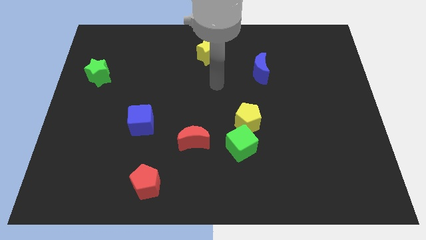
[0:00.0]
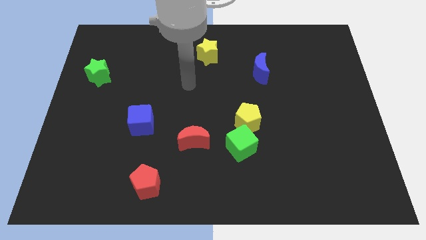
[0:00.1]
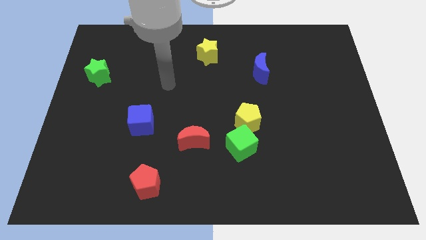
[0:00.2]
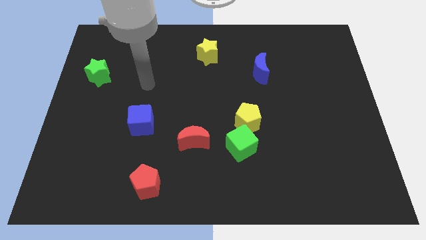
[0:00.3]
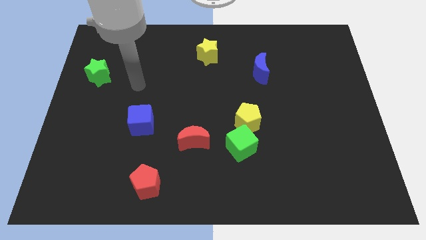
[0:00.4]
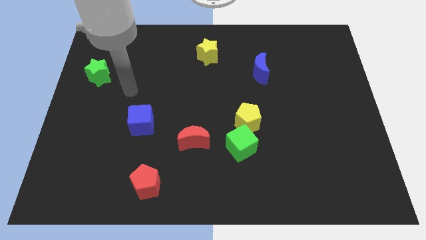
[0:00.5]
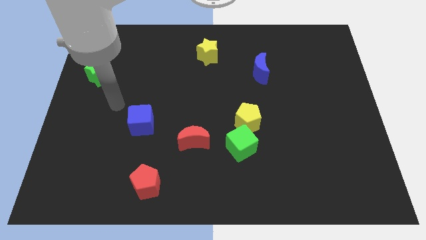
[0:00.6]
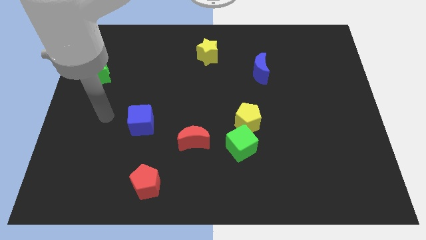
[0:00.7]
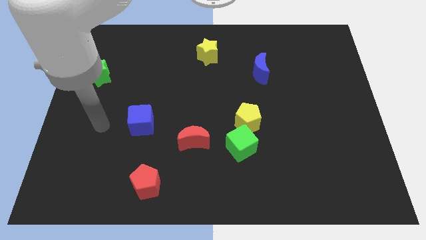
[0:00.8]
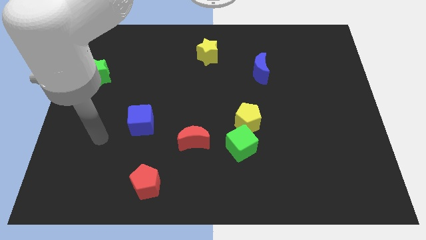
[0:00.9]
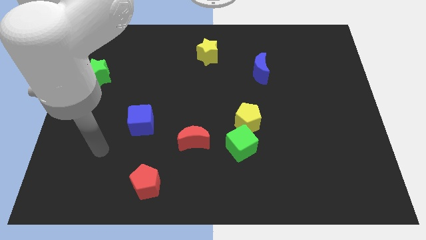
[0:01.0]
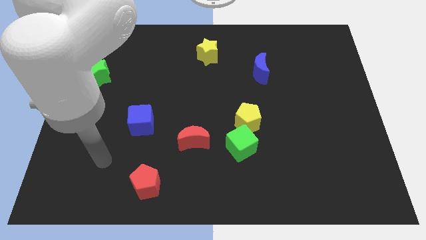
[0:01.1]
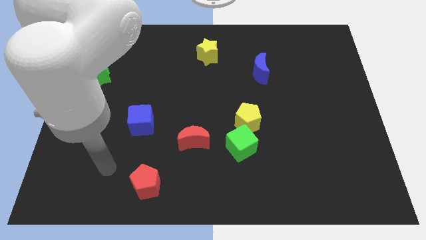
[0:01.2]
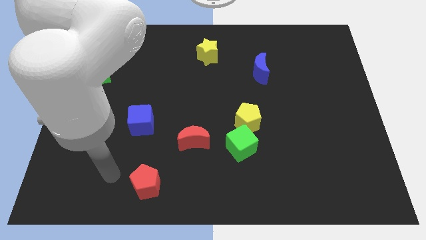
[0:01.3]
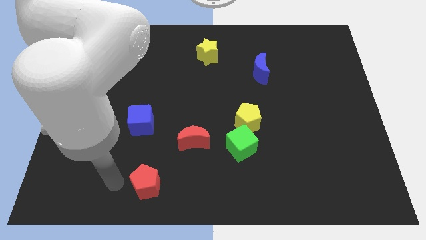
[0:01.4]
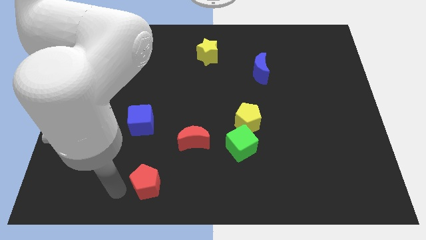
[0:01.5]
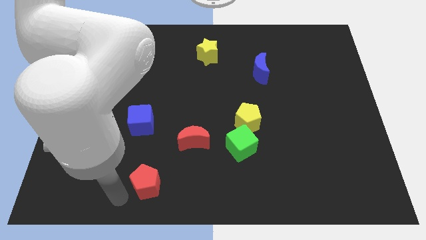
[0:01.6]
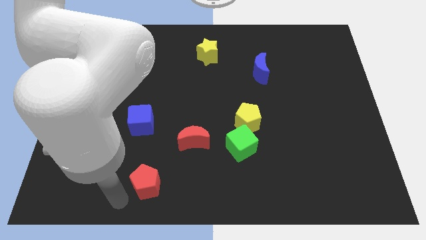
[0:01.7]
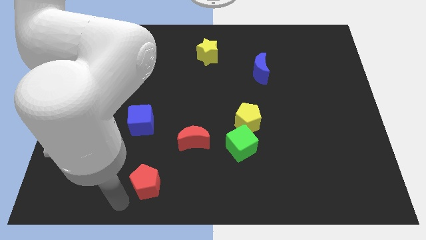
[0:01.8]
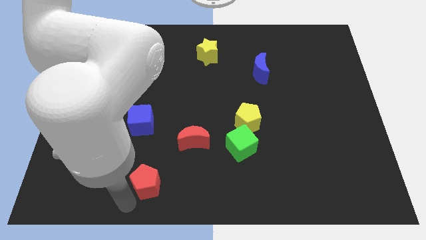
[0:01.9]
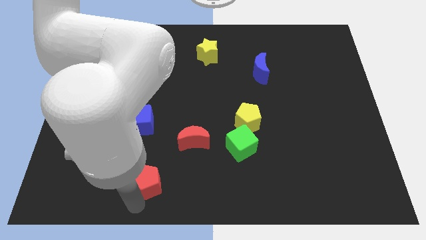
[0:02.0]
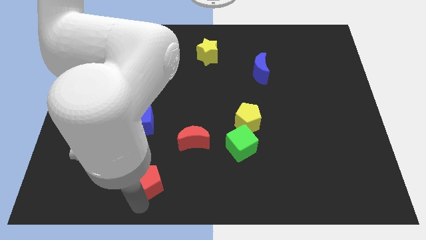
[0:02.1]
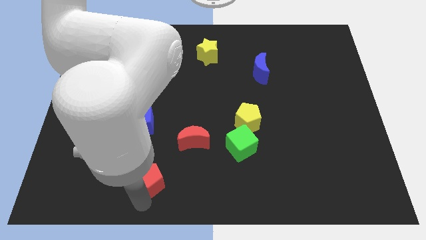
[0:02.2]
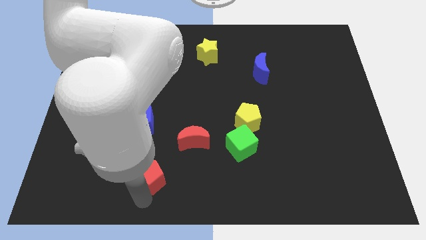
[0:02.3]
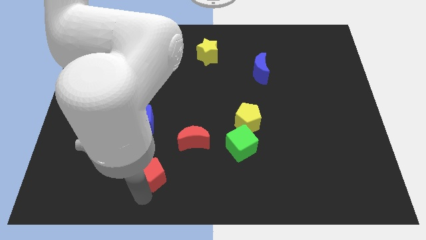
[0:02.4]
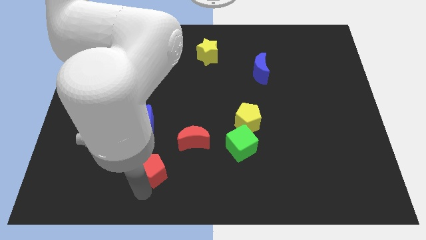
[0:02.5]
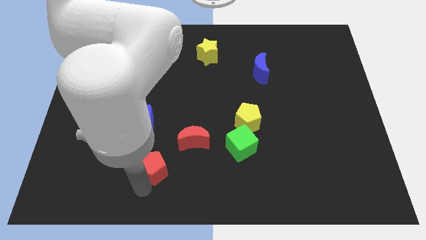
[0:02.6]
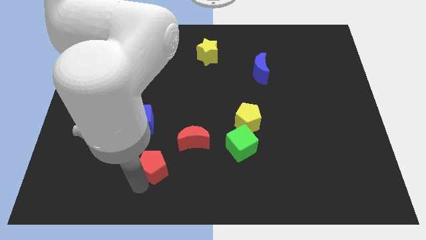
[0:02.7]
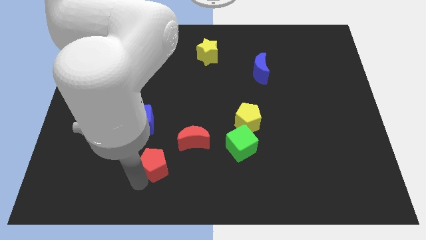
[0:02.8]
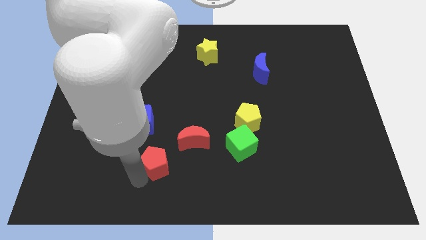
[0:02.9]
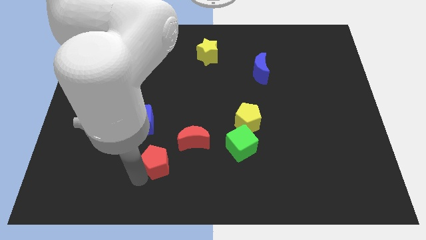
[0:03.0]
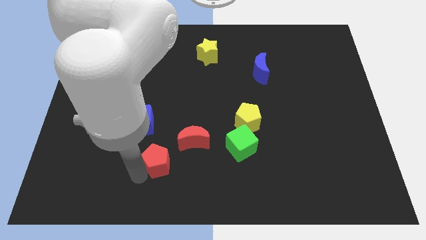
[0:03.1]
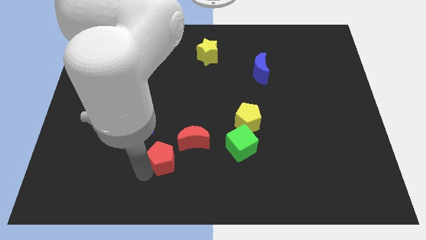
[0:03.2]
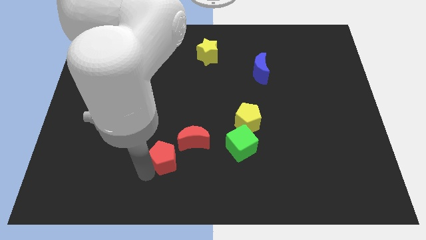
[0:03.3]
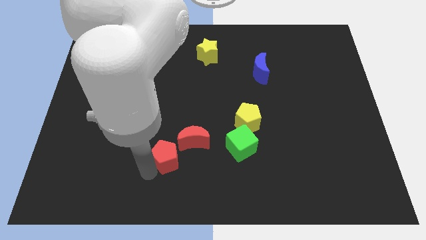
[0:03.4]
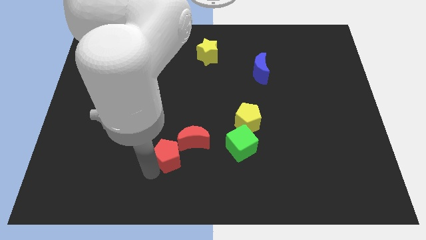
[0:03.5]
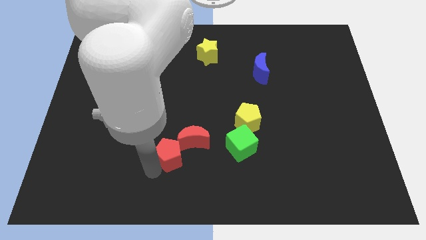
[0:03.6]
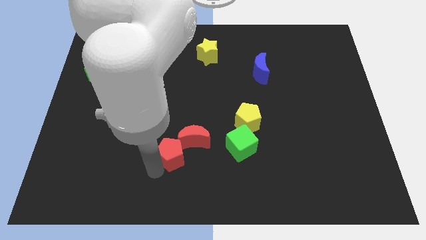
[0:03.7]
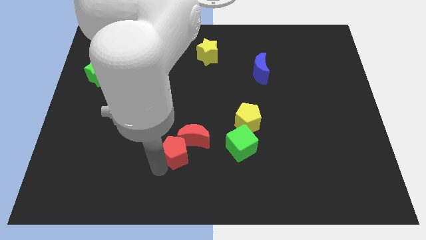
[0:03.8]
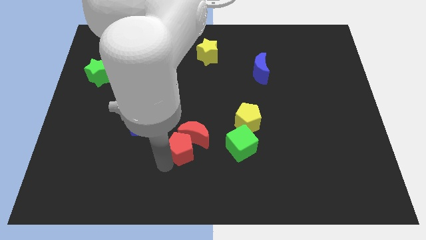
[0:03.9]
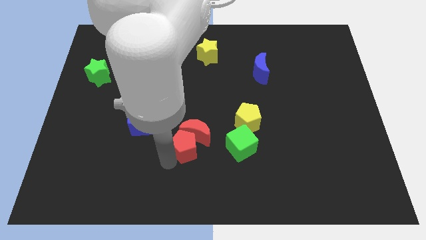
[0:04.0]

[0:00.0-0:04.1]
put the red pentagon towards the red moon

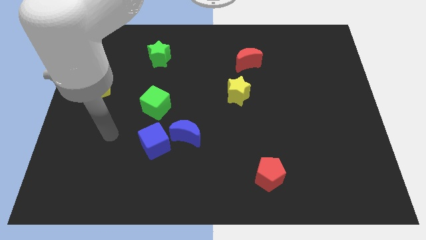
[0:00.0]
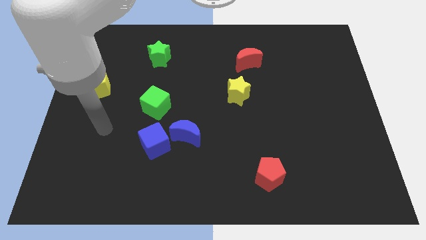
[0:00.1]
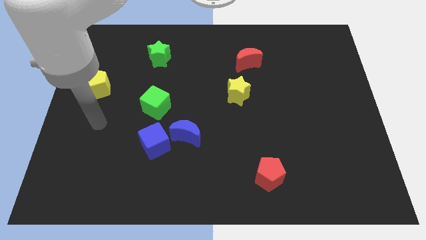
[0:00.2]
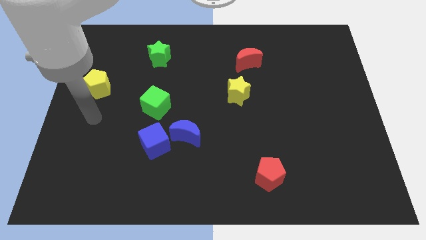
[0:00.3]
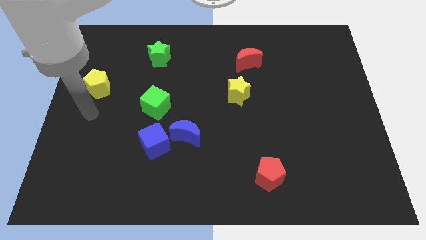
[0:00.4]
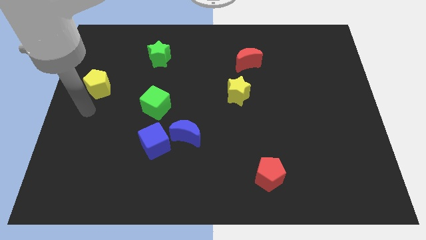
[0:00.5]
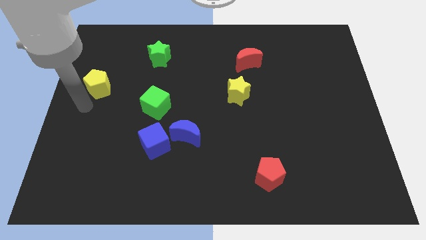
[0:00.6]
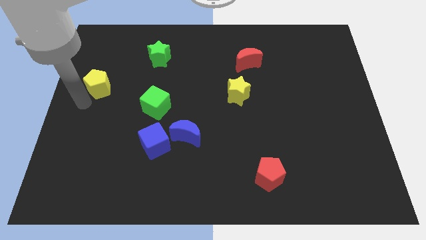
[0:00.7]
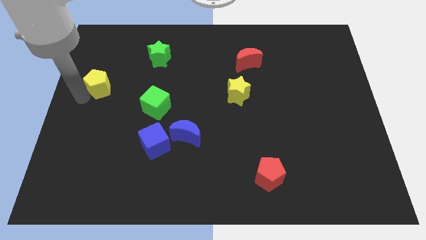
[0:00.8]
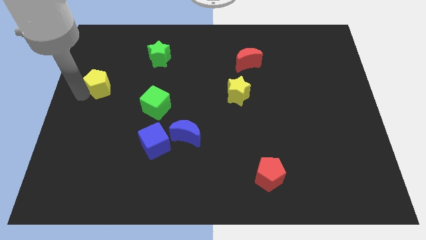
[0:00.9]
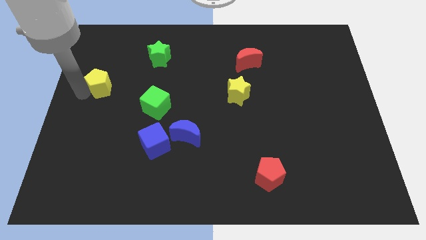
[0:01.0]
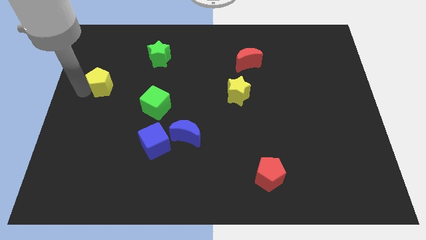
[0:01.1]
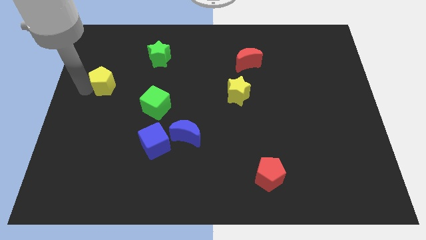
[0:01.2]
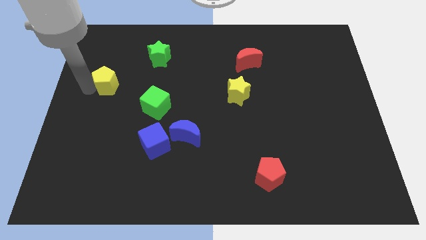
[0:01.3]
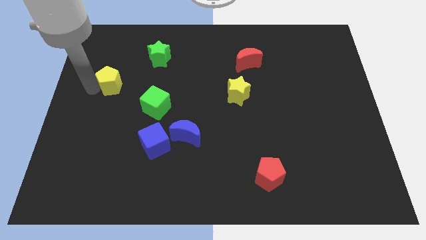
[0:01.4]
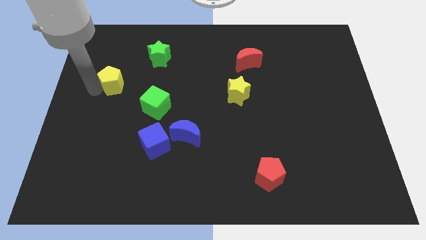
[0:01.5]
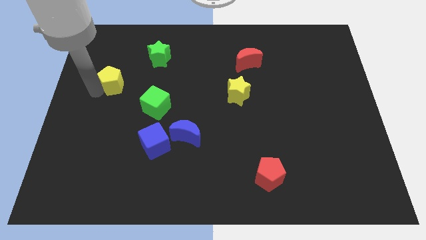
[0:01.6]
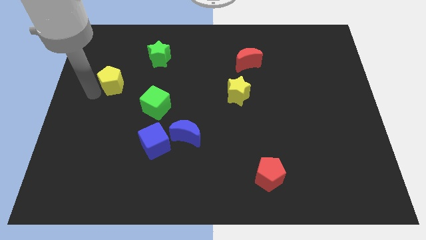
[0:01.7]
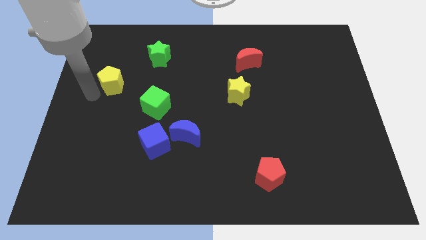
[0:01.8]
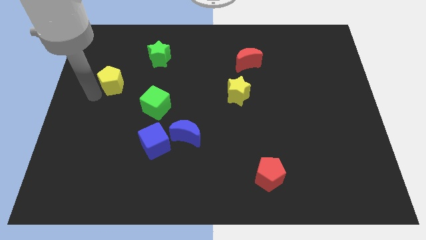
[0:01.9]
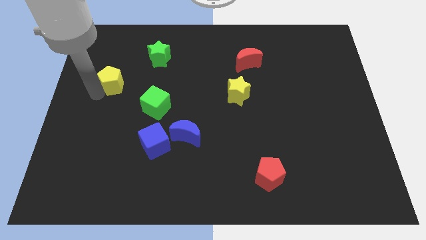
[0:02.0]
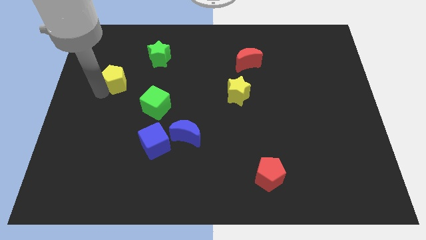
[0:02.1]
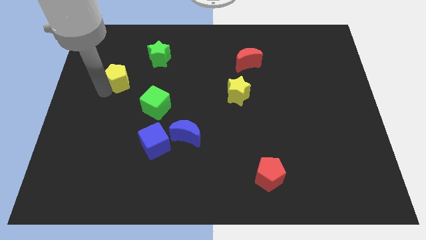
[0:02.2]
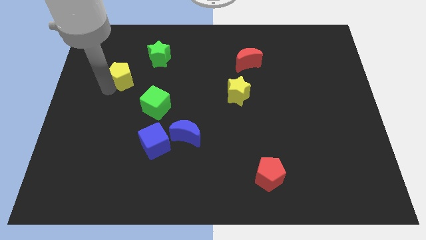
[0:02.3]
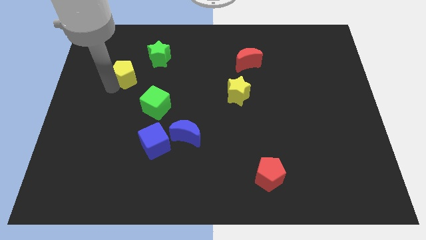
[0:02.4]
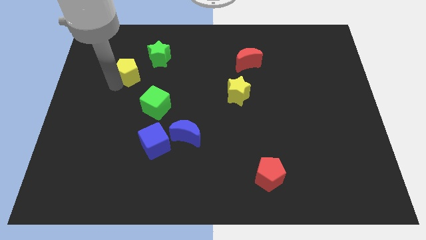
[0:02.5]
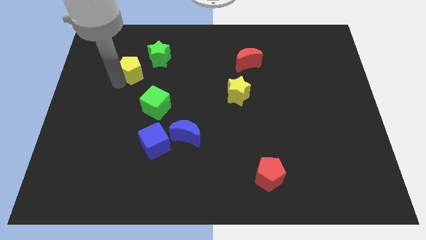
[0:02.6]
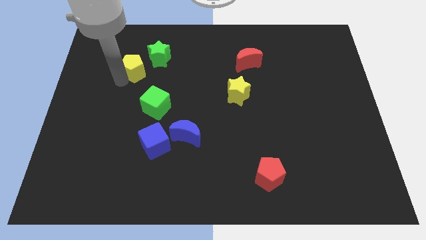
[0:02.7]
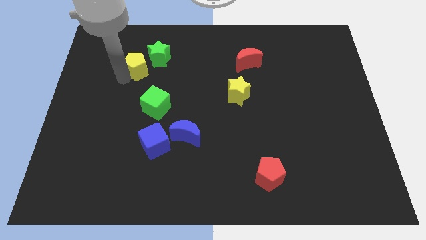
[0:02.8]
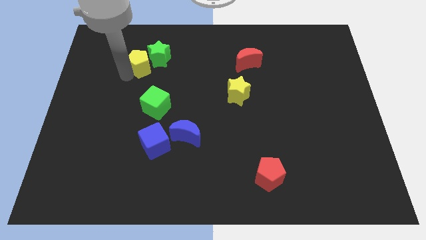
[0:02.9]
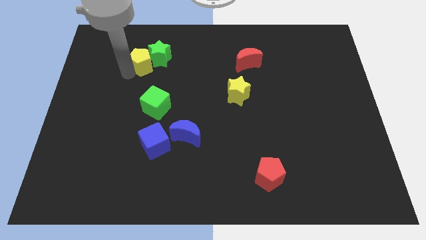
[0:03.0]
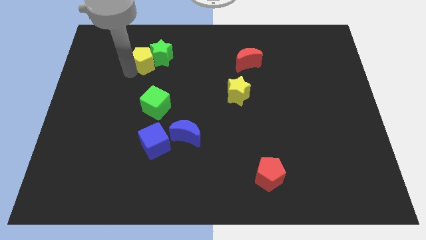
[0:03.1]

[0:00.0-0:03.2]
move the yellow pentagon to the green star

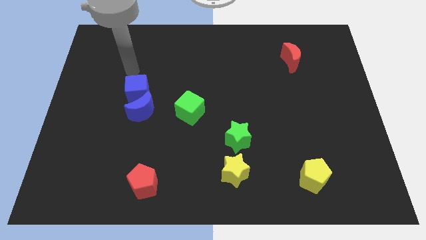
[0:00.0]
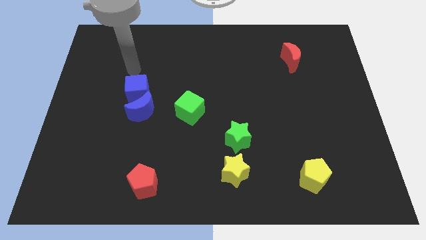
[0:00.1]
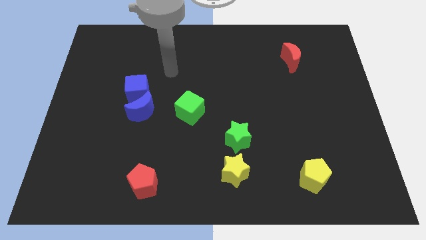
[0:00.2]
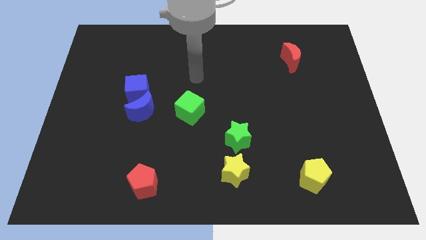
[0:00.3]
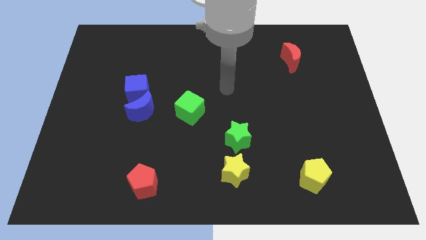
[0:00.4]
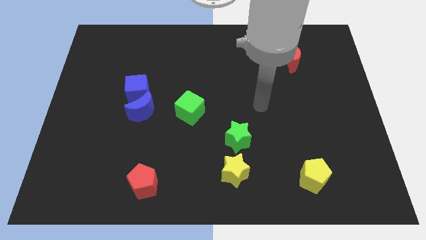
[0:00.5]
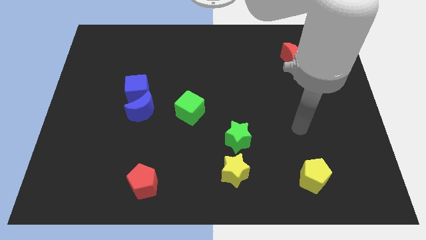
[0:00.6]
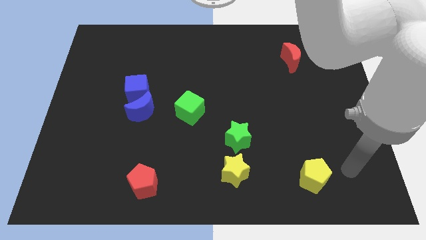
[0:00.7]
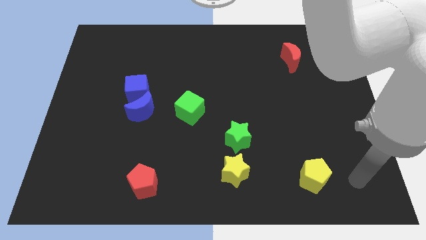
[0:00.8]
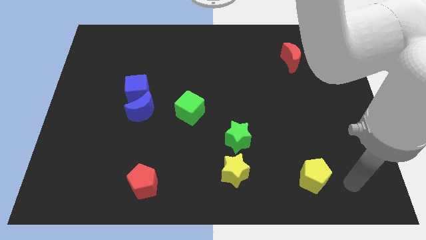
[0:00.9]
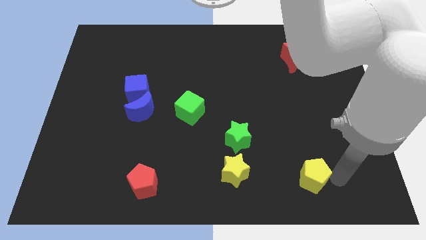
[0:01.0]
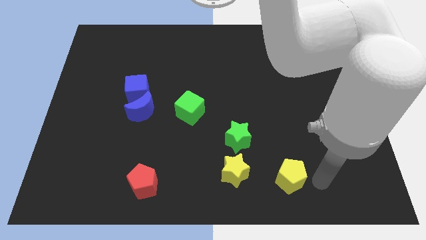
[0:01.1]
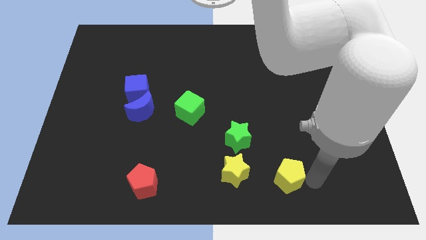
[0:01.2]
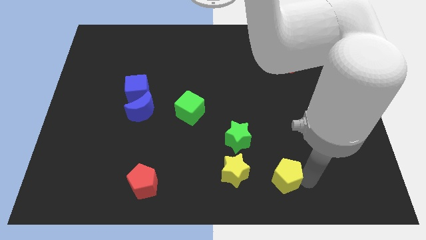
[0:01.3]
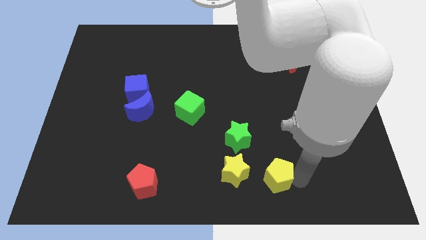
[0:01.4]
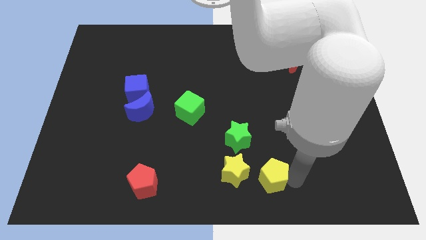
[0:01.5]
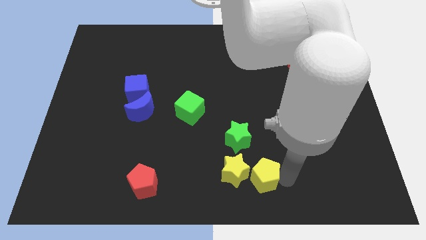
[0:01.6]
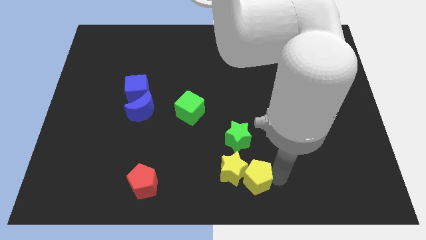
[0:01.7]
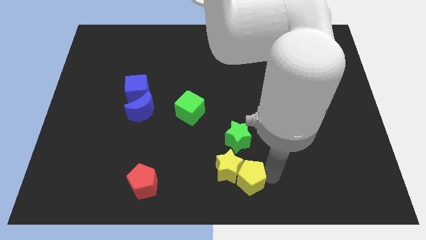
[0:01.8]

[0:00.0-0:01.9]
push the yellow pentagon towards the yellow star
